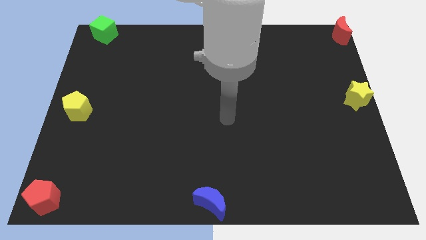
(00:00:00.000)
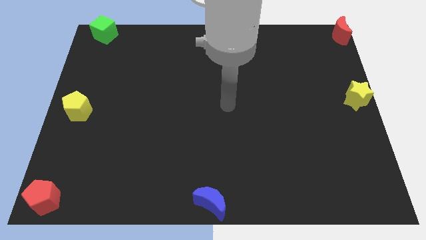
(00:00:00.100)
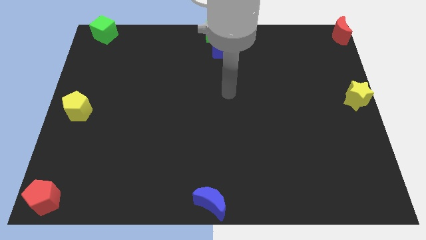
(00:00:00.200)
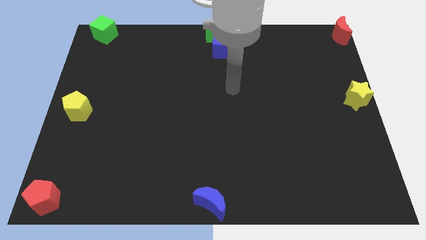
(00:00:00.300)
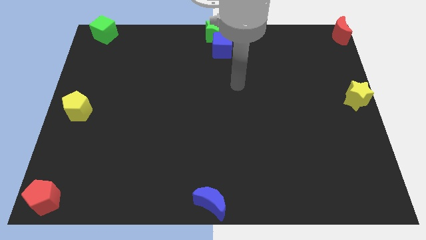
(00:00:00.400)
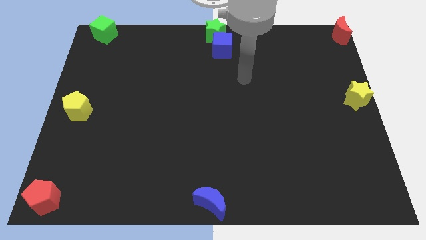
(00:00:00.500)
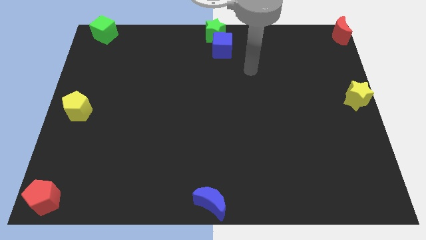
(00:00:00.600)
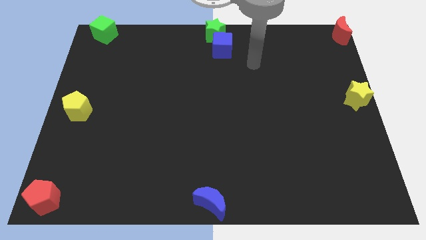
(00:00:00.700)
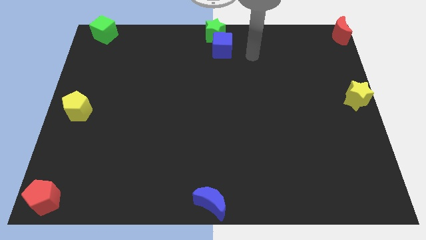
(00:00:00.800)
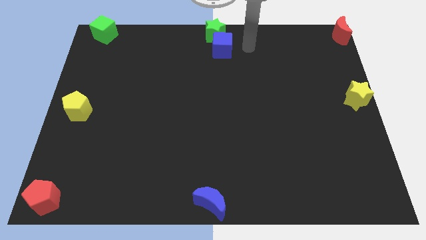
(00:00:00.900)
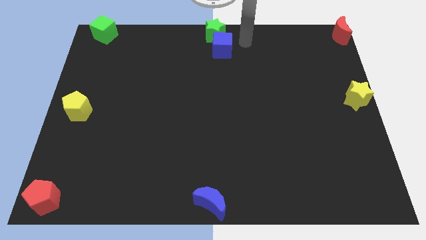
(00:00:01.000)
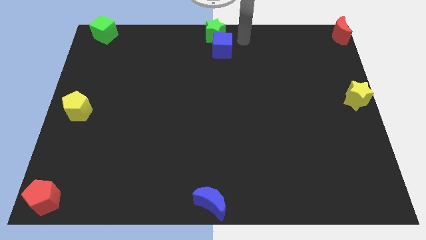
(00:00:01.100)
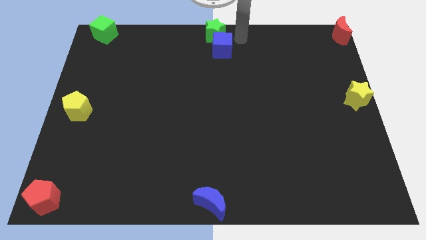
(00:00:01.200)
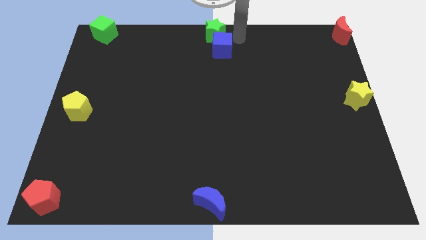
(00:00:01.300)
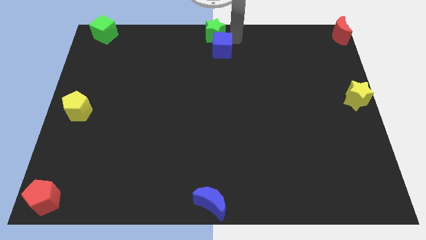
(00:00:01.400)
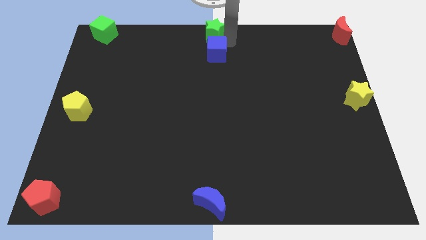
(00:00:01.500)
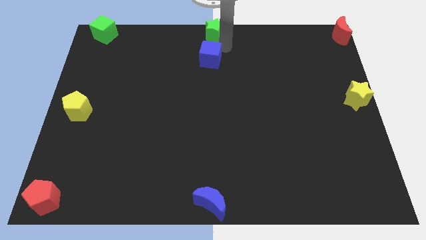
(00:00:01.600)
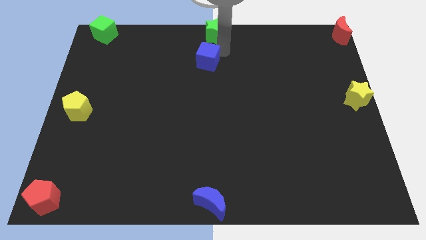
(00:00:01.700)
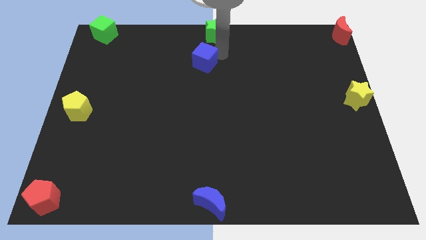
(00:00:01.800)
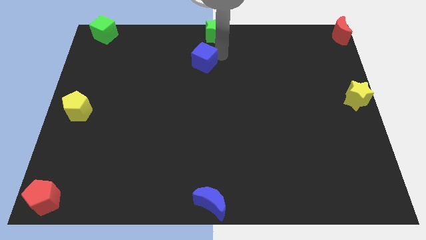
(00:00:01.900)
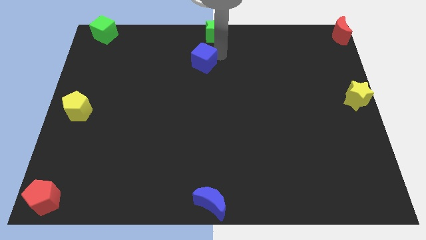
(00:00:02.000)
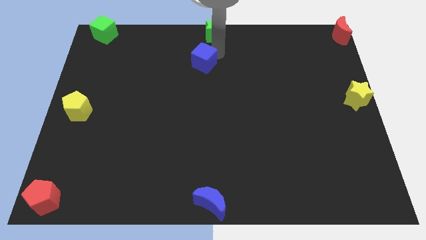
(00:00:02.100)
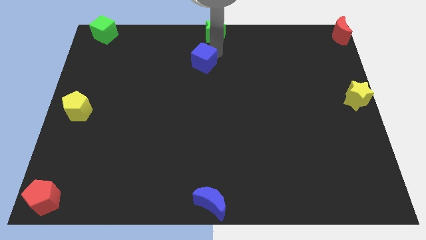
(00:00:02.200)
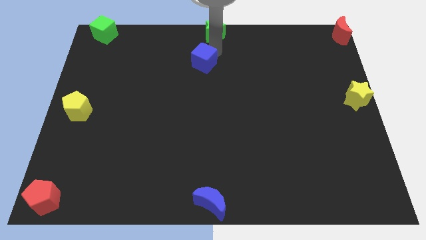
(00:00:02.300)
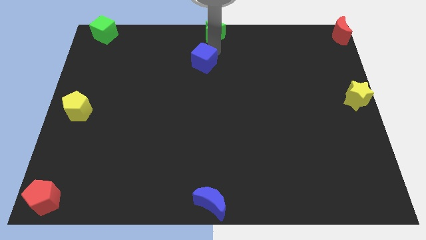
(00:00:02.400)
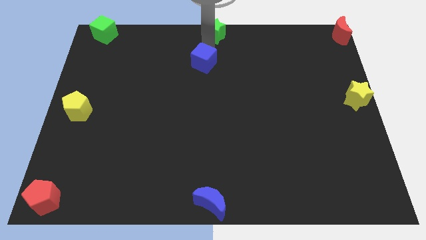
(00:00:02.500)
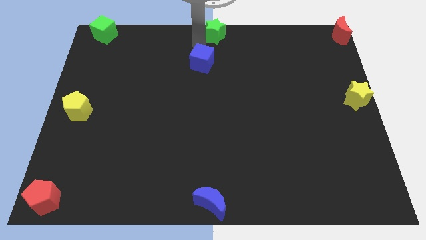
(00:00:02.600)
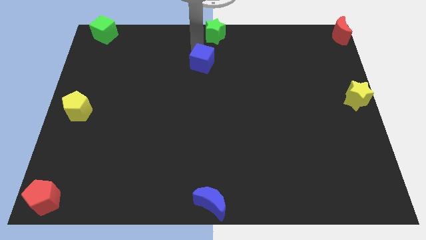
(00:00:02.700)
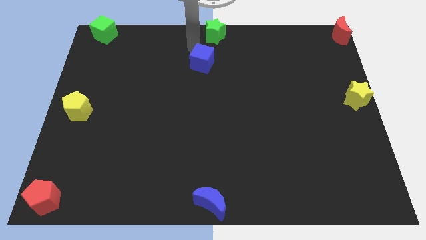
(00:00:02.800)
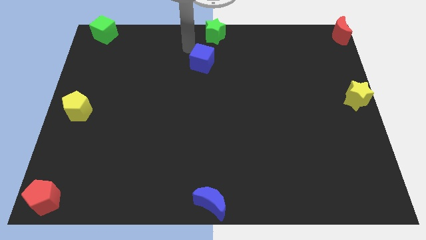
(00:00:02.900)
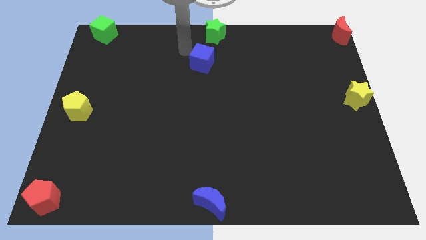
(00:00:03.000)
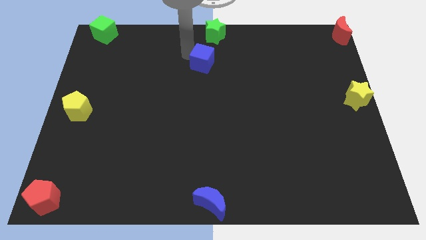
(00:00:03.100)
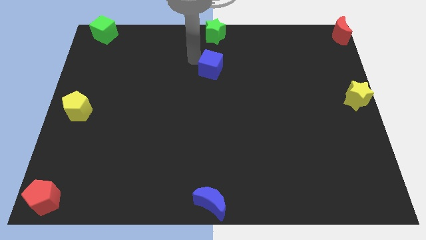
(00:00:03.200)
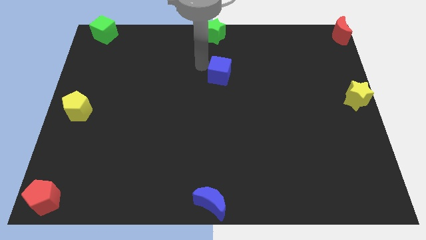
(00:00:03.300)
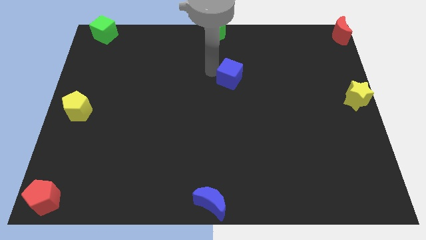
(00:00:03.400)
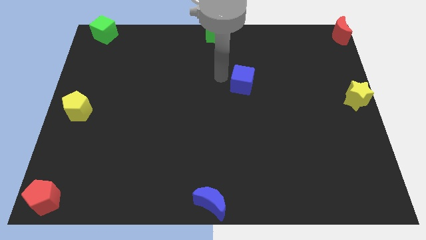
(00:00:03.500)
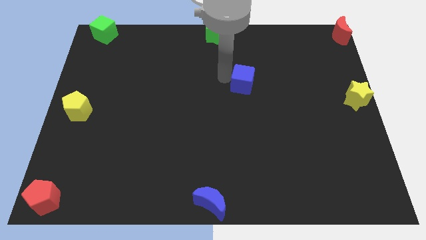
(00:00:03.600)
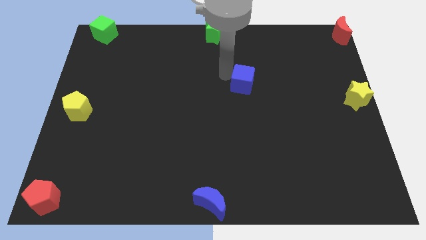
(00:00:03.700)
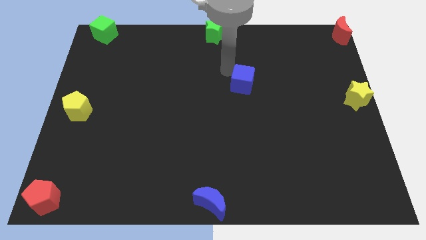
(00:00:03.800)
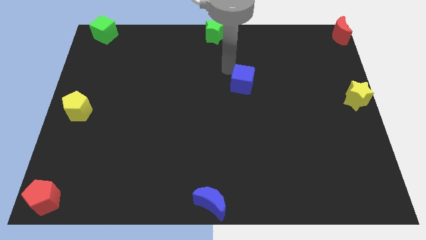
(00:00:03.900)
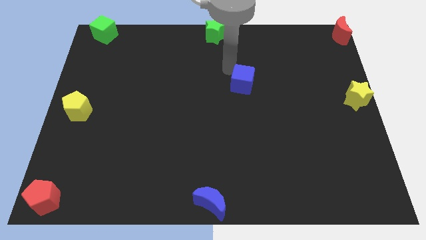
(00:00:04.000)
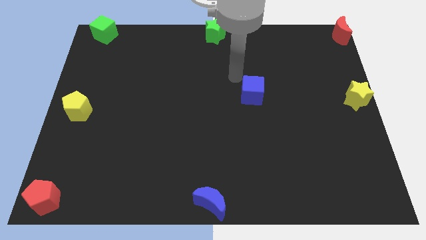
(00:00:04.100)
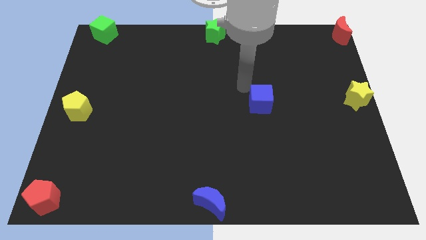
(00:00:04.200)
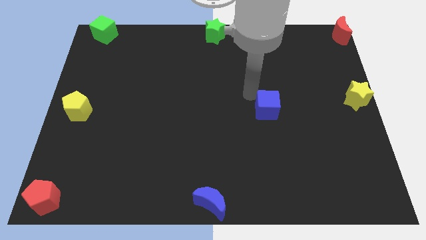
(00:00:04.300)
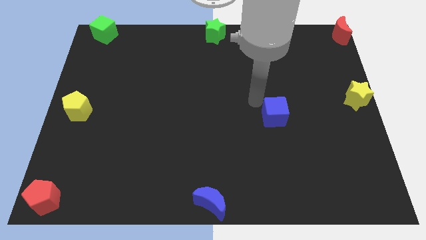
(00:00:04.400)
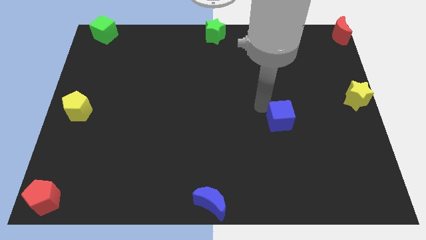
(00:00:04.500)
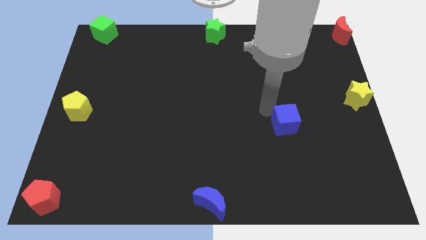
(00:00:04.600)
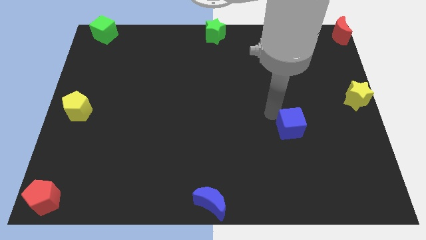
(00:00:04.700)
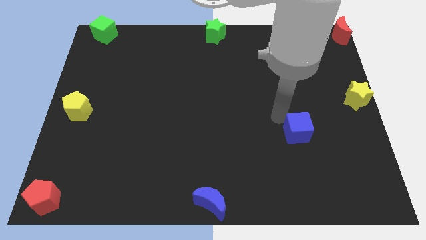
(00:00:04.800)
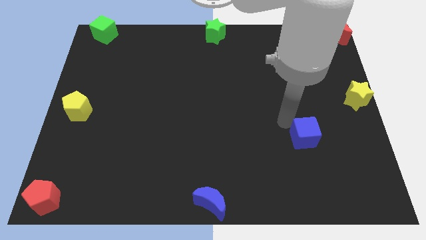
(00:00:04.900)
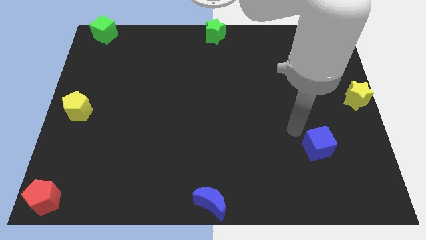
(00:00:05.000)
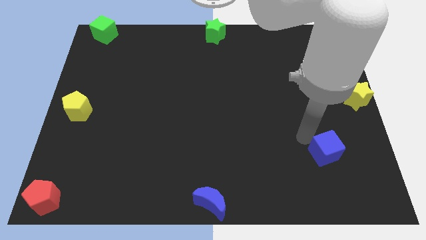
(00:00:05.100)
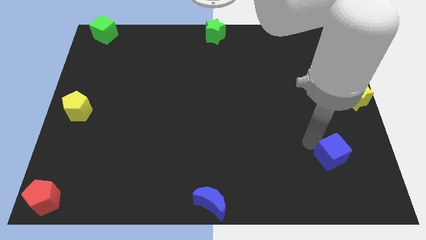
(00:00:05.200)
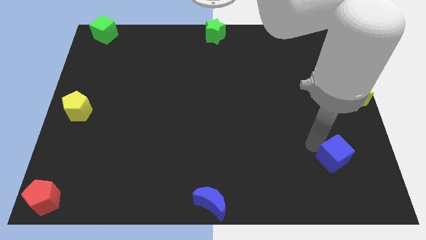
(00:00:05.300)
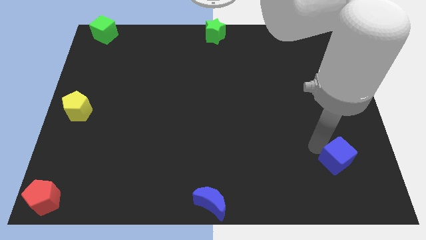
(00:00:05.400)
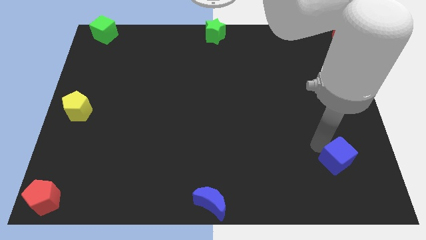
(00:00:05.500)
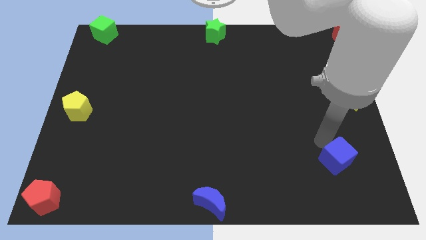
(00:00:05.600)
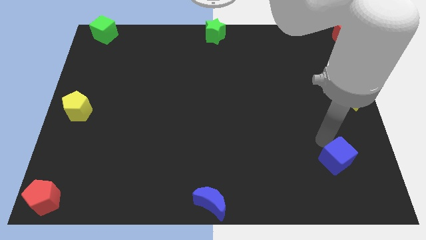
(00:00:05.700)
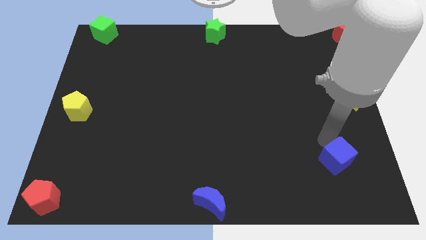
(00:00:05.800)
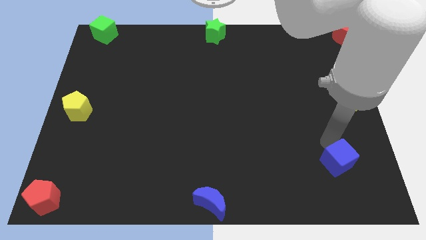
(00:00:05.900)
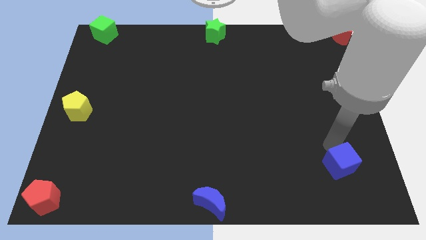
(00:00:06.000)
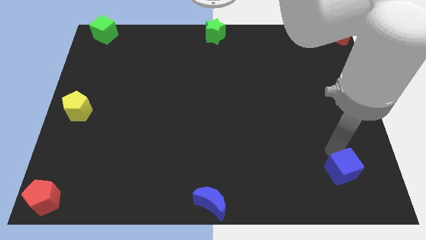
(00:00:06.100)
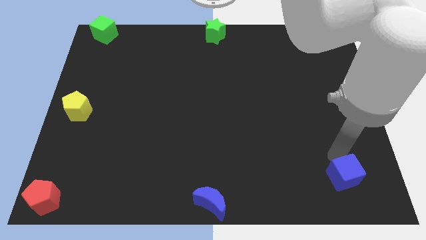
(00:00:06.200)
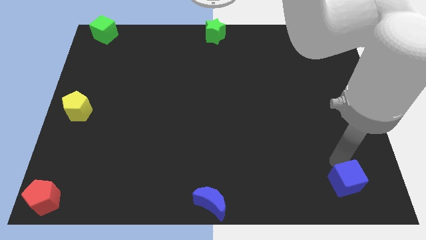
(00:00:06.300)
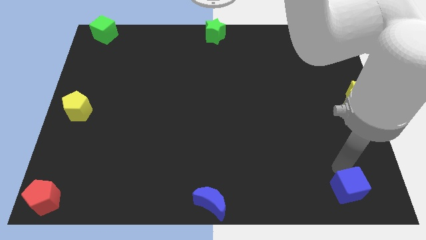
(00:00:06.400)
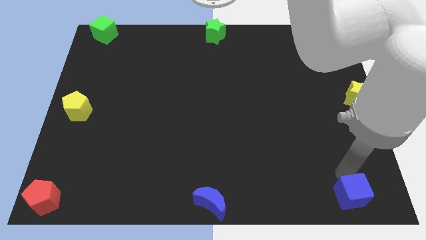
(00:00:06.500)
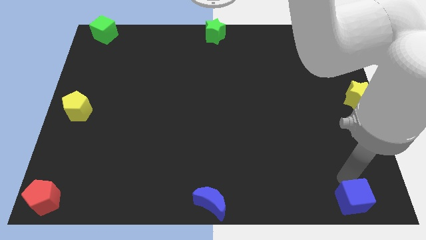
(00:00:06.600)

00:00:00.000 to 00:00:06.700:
place the blue cube to the bottom right corner

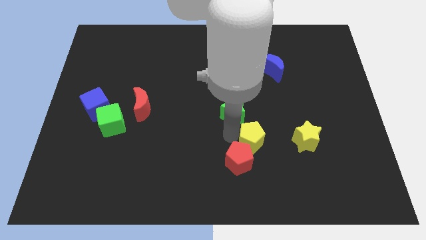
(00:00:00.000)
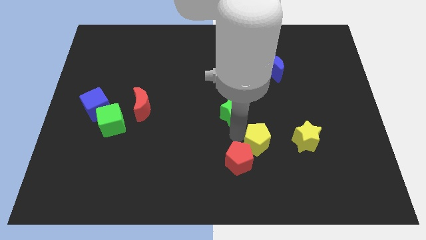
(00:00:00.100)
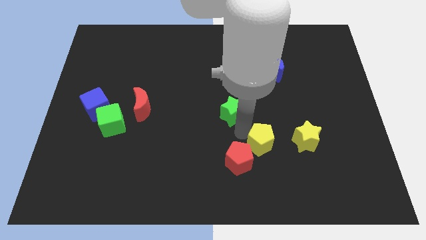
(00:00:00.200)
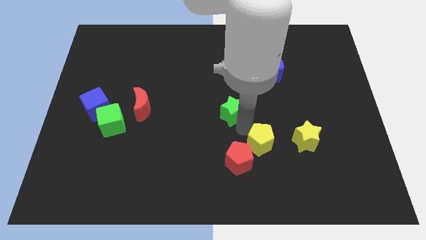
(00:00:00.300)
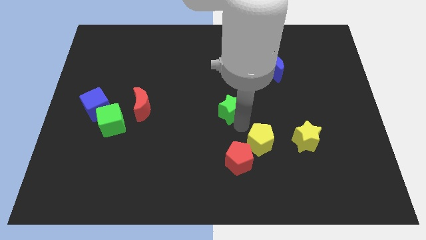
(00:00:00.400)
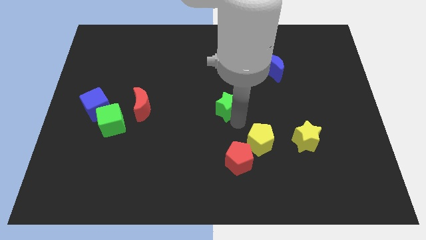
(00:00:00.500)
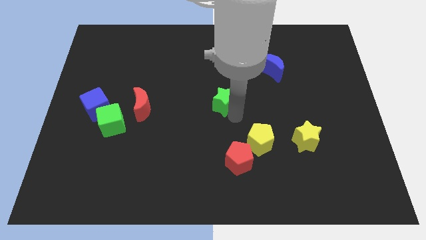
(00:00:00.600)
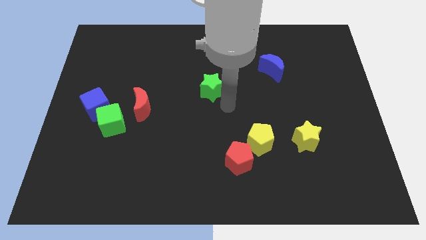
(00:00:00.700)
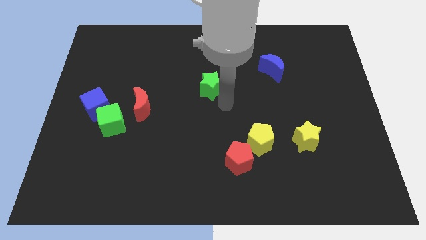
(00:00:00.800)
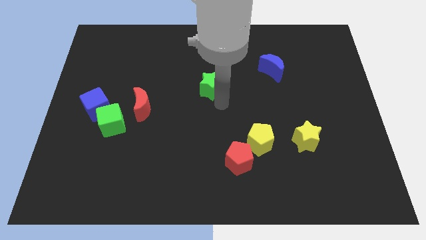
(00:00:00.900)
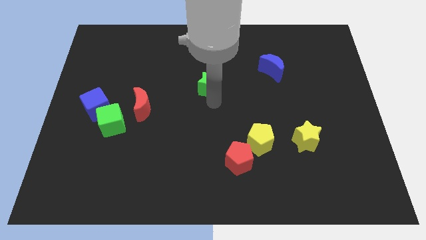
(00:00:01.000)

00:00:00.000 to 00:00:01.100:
separate green star from yellow pentagon

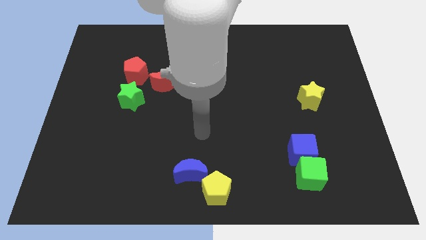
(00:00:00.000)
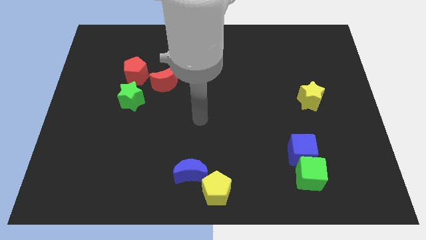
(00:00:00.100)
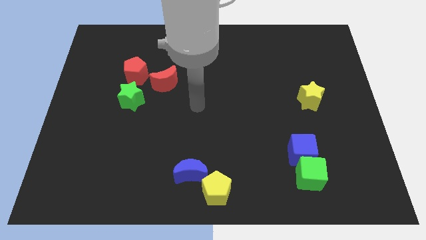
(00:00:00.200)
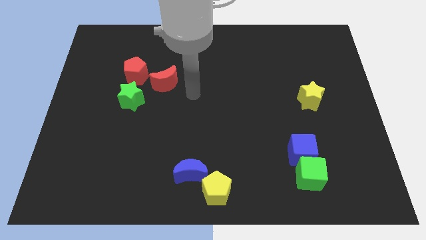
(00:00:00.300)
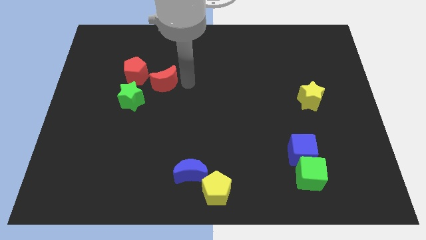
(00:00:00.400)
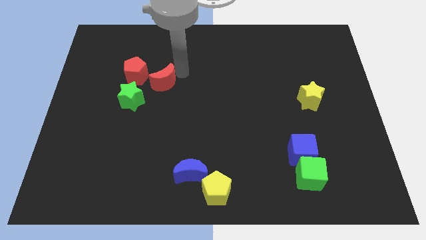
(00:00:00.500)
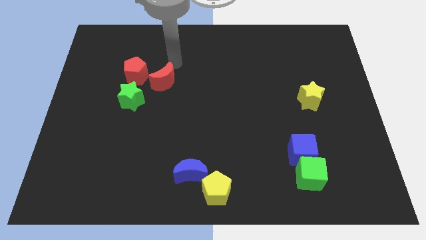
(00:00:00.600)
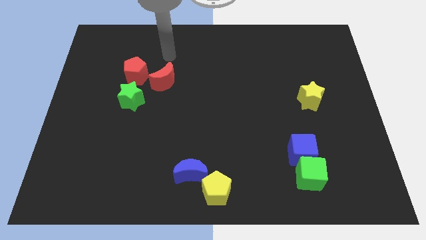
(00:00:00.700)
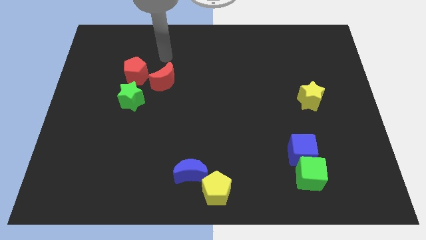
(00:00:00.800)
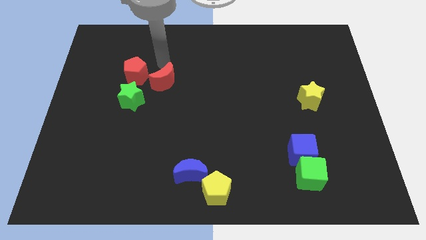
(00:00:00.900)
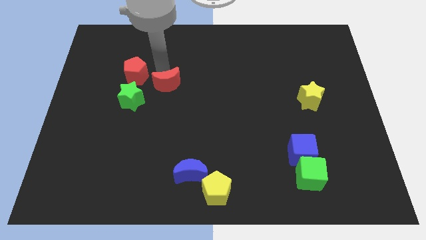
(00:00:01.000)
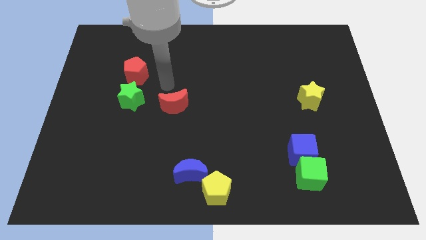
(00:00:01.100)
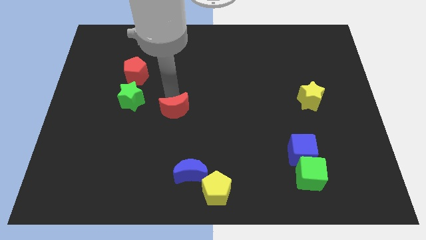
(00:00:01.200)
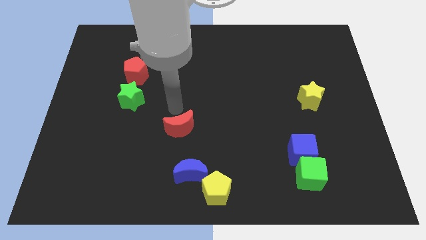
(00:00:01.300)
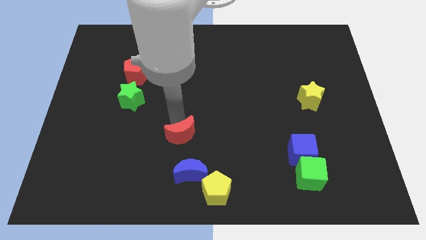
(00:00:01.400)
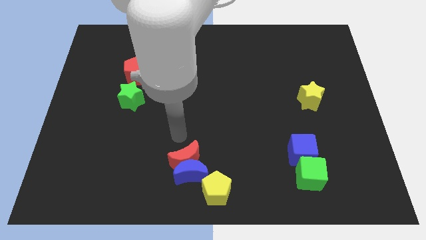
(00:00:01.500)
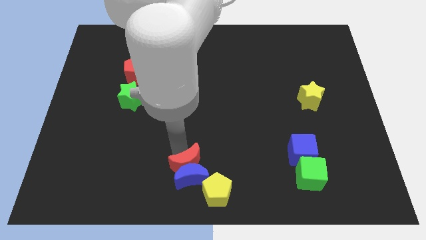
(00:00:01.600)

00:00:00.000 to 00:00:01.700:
move the red crescent towards the blue crescent
